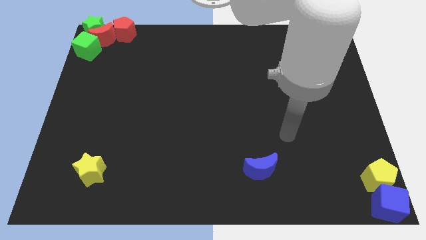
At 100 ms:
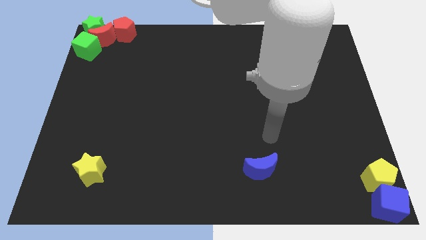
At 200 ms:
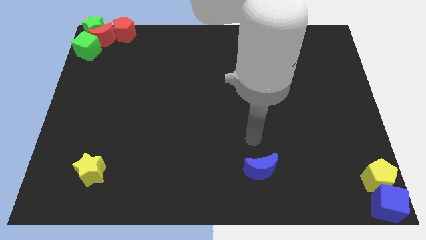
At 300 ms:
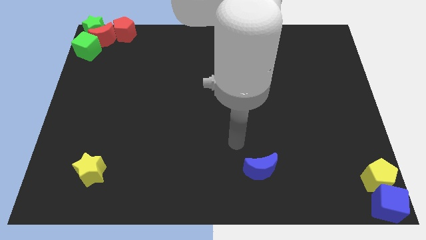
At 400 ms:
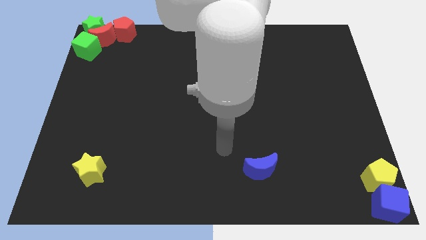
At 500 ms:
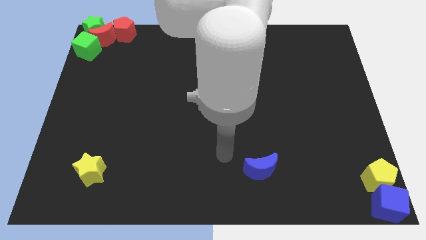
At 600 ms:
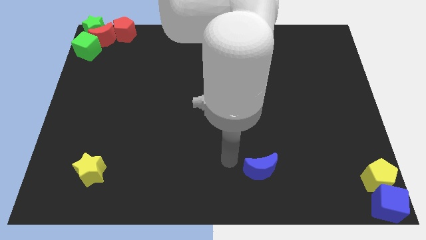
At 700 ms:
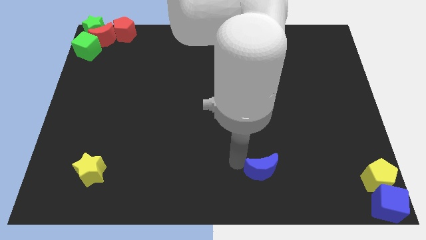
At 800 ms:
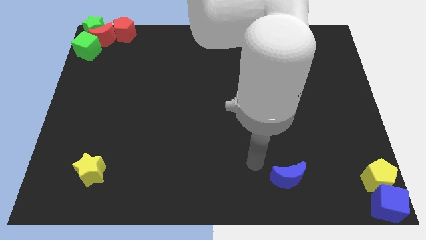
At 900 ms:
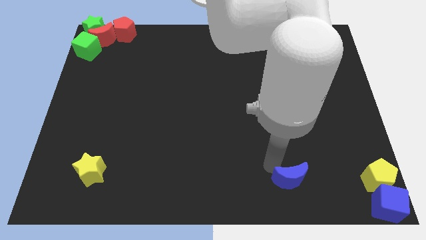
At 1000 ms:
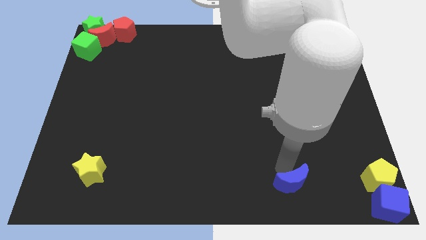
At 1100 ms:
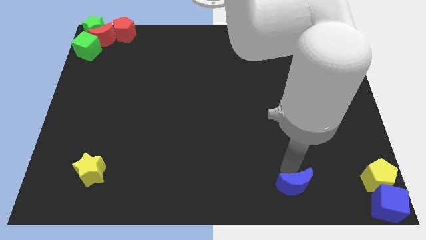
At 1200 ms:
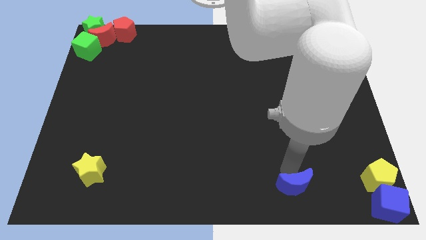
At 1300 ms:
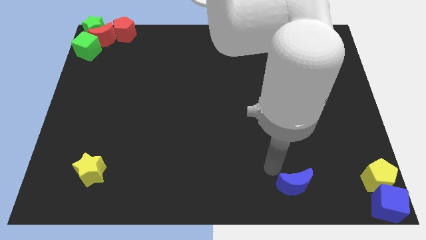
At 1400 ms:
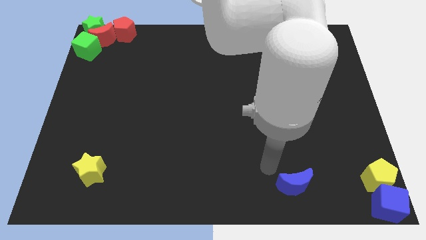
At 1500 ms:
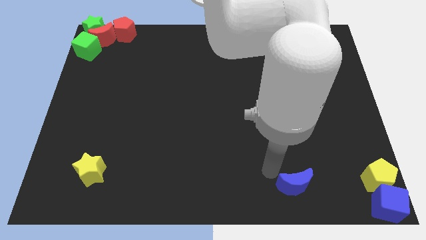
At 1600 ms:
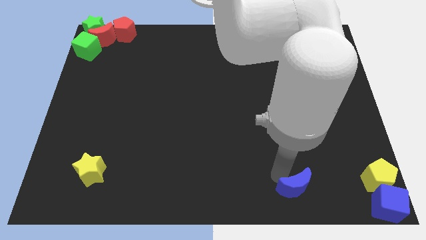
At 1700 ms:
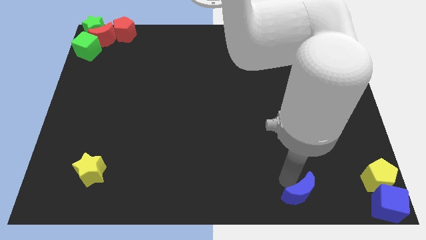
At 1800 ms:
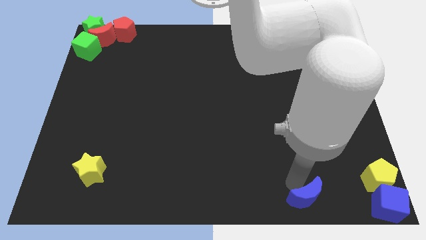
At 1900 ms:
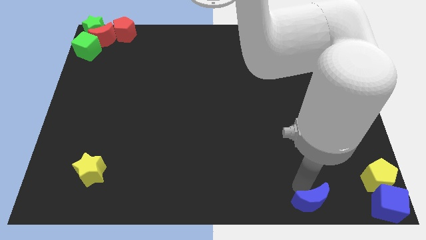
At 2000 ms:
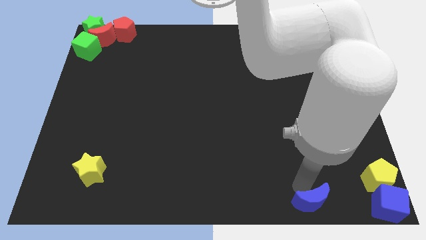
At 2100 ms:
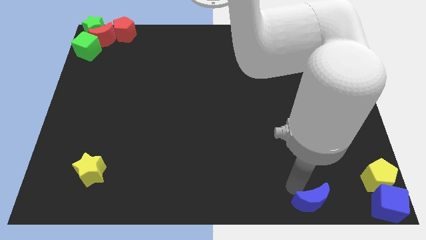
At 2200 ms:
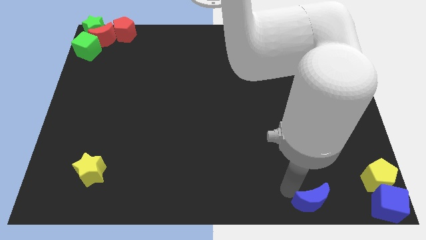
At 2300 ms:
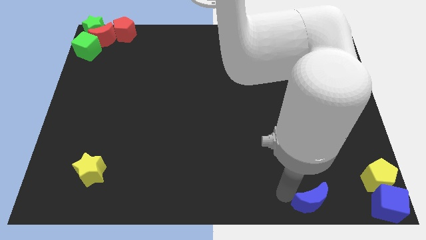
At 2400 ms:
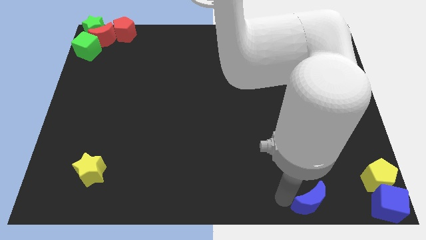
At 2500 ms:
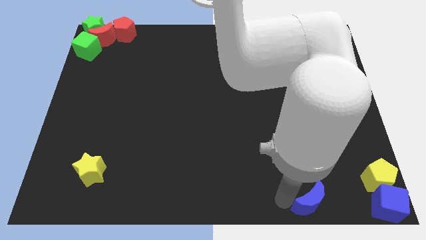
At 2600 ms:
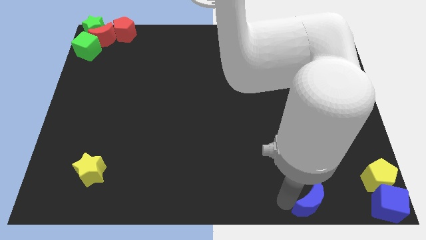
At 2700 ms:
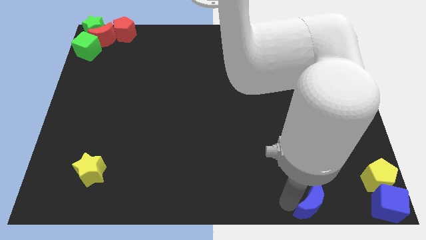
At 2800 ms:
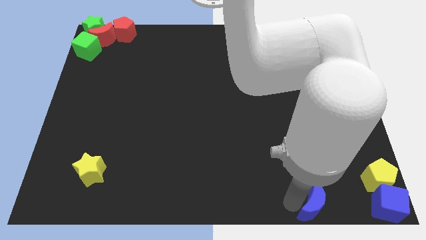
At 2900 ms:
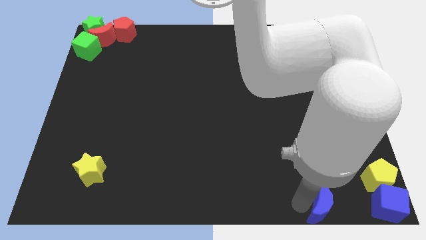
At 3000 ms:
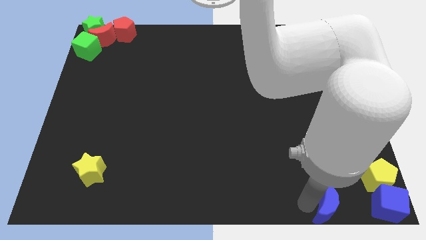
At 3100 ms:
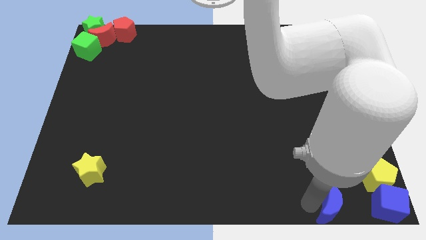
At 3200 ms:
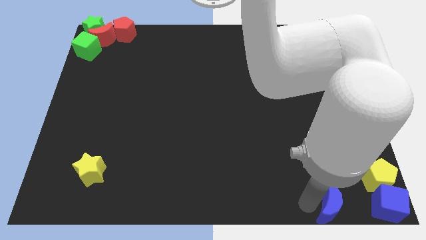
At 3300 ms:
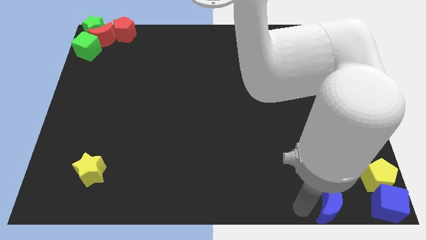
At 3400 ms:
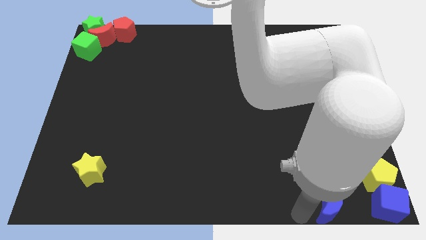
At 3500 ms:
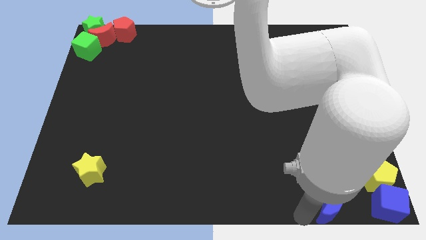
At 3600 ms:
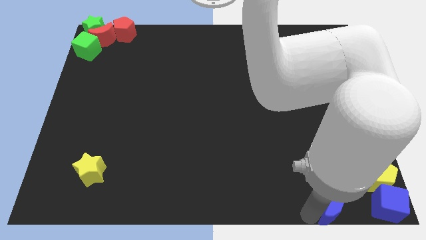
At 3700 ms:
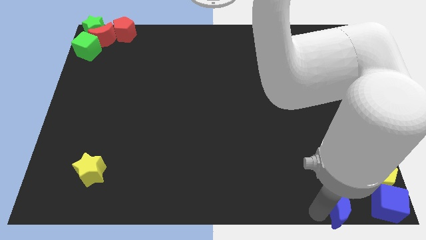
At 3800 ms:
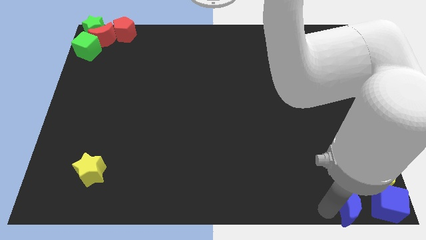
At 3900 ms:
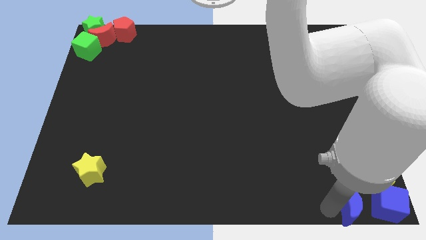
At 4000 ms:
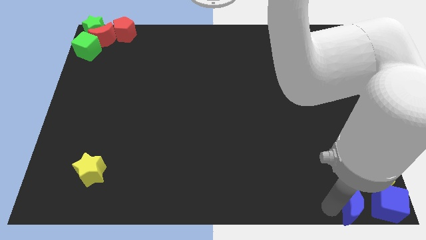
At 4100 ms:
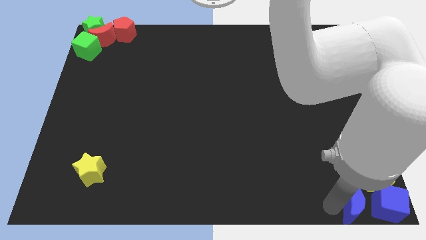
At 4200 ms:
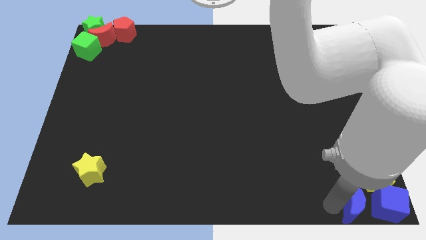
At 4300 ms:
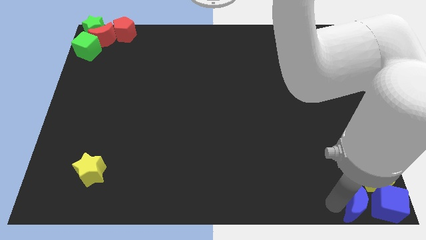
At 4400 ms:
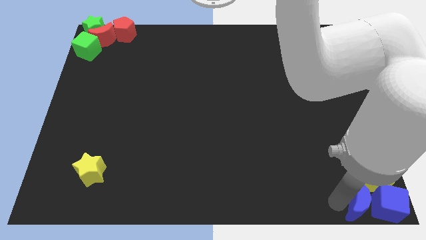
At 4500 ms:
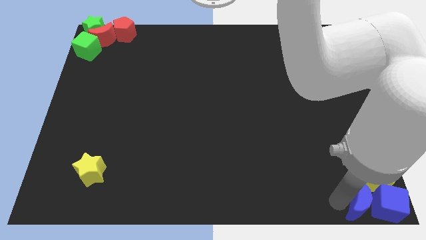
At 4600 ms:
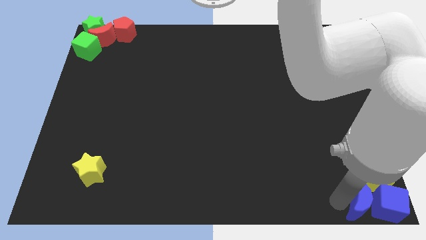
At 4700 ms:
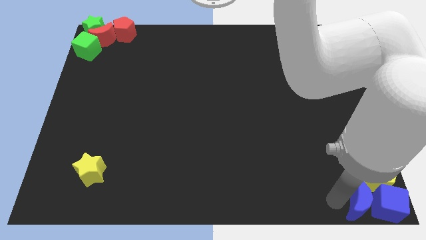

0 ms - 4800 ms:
push the blue crescent into the blue cube

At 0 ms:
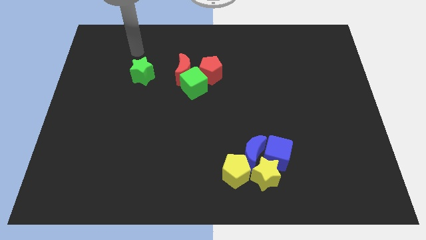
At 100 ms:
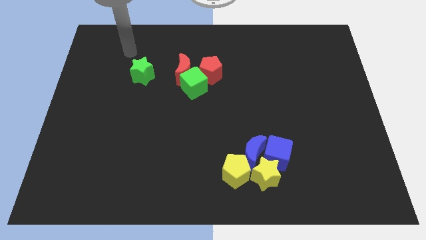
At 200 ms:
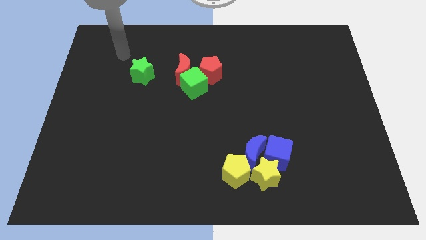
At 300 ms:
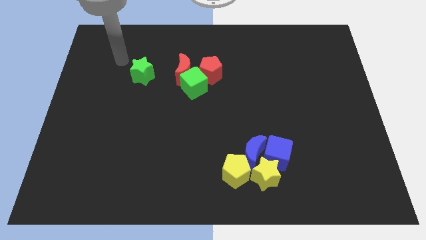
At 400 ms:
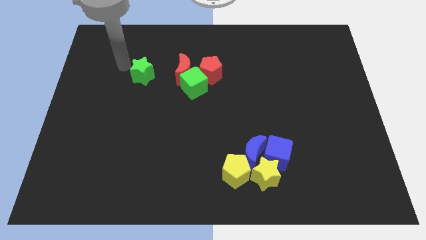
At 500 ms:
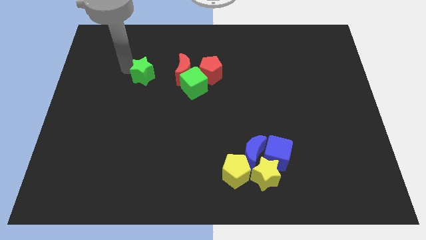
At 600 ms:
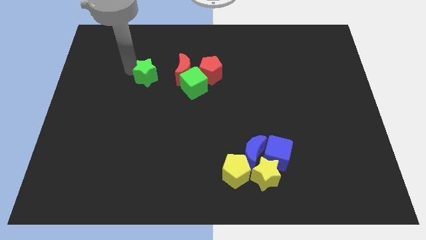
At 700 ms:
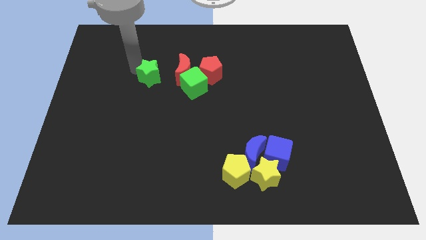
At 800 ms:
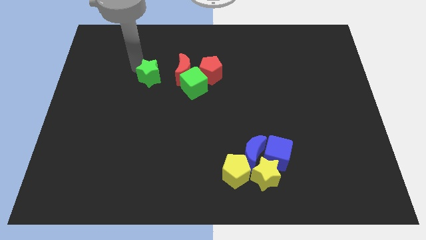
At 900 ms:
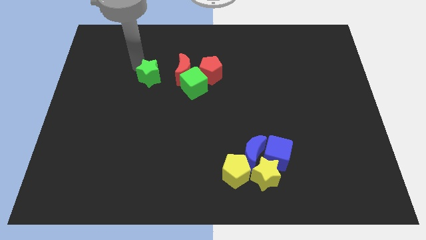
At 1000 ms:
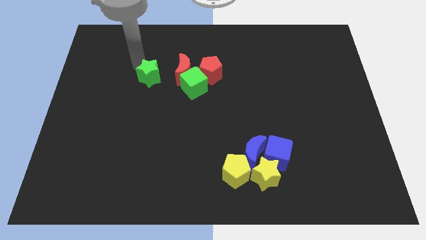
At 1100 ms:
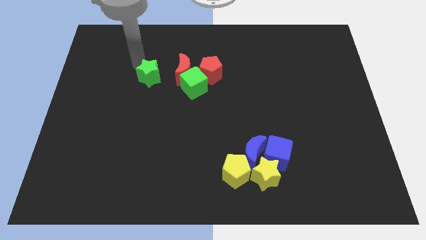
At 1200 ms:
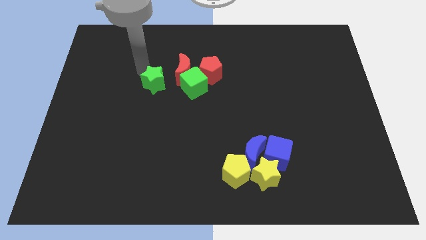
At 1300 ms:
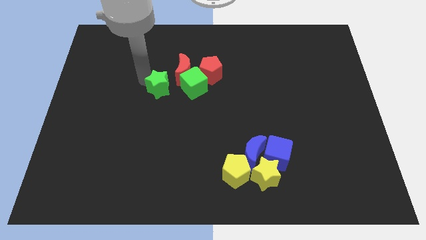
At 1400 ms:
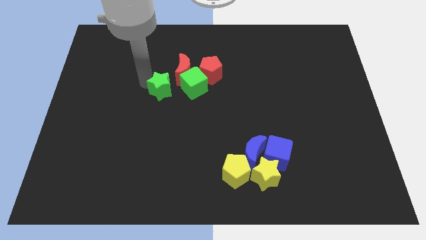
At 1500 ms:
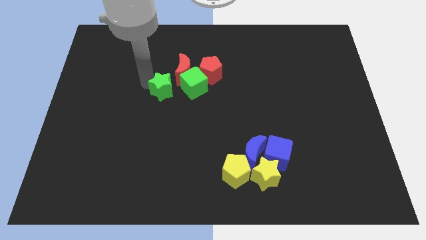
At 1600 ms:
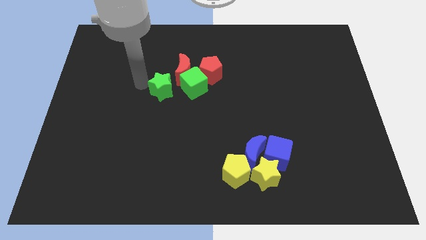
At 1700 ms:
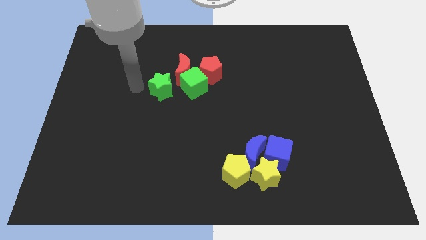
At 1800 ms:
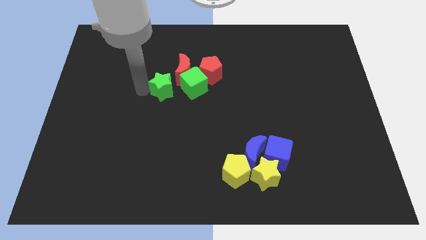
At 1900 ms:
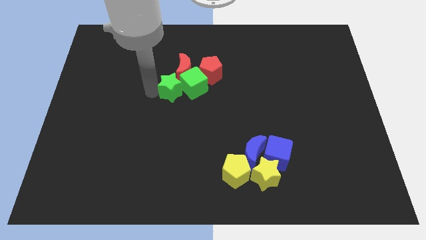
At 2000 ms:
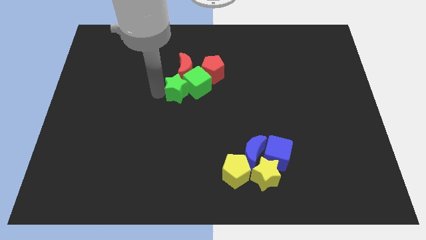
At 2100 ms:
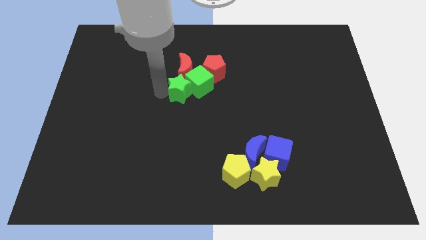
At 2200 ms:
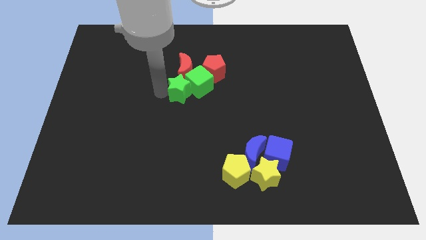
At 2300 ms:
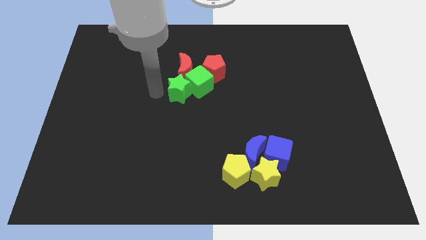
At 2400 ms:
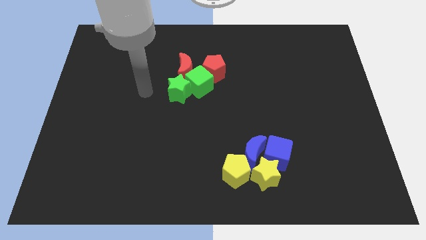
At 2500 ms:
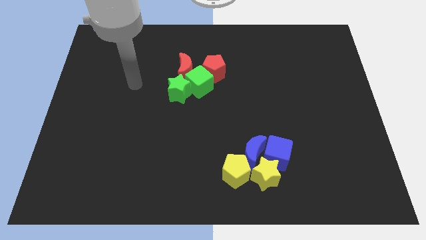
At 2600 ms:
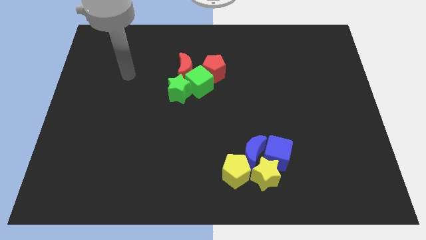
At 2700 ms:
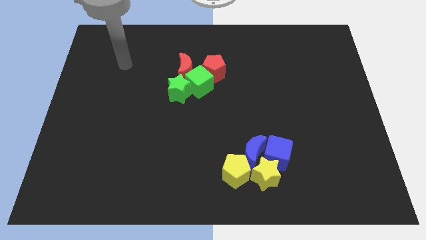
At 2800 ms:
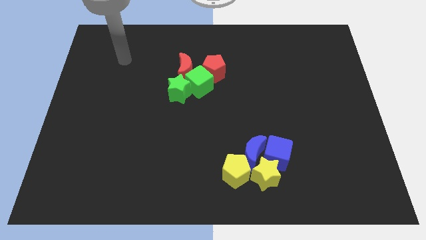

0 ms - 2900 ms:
push the green star towards the green cube

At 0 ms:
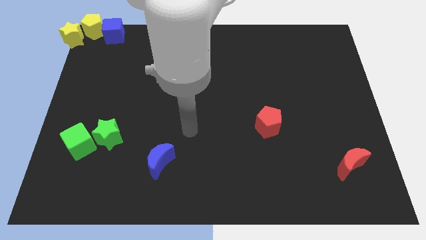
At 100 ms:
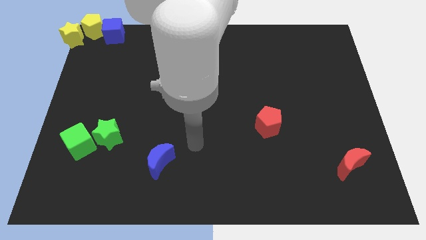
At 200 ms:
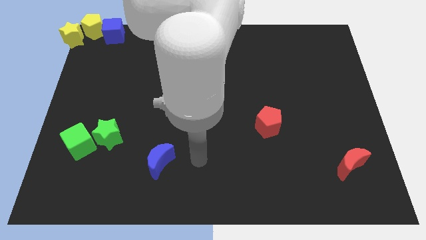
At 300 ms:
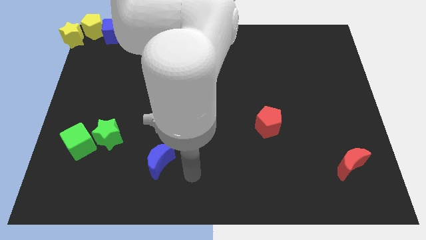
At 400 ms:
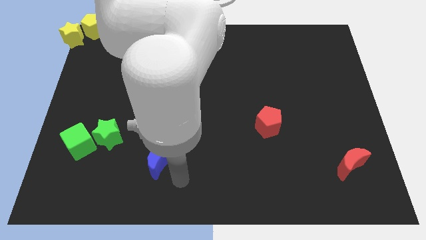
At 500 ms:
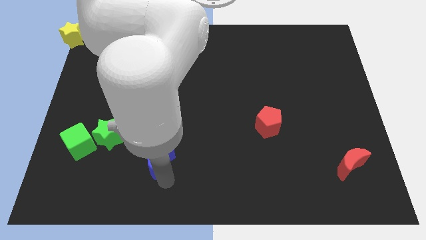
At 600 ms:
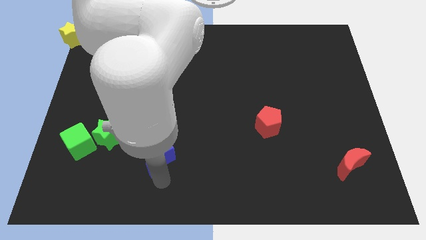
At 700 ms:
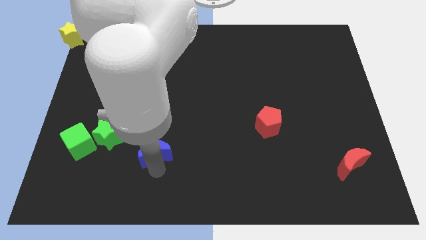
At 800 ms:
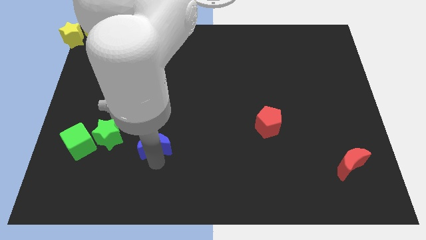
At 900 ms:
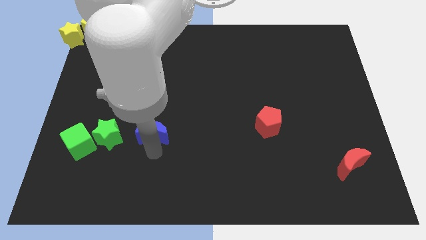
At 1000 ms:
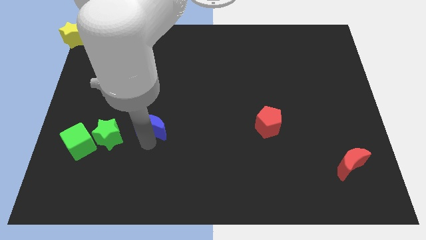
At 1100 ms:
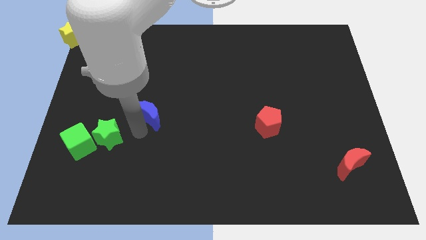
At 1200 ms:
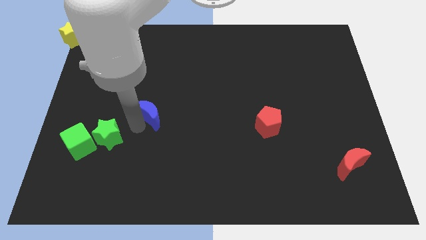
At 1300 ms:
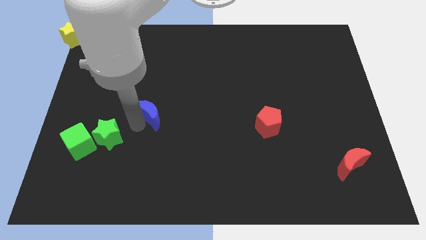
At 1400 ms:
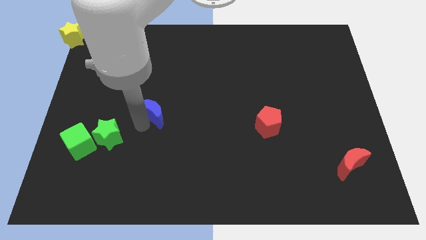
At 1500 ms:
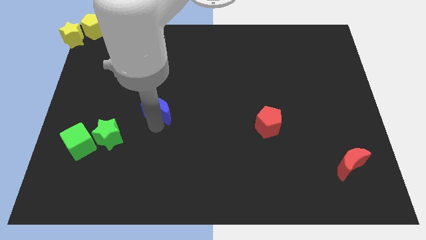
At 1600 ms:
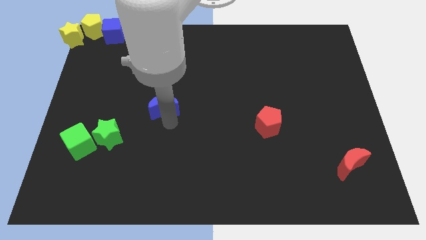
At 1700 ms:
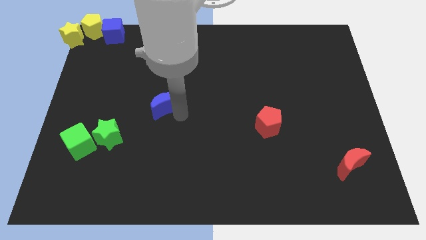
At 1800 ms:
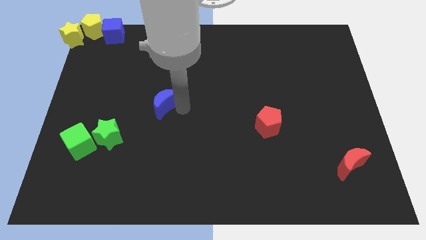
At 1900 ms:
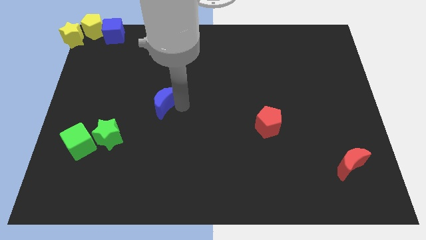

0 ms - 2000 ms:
move the blue crescent to the center of the board
